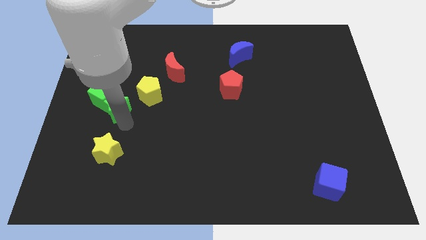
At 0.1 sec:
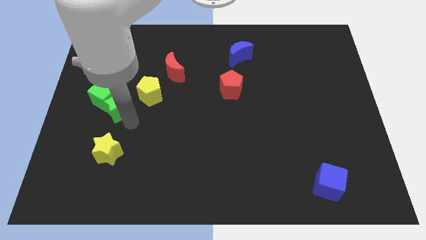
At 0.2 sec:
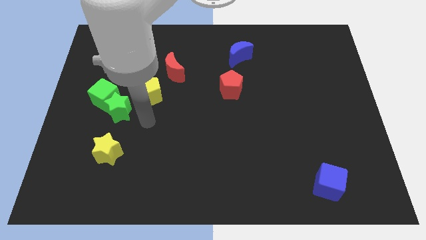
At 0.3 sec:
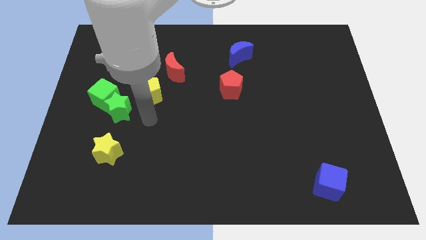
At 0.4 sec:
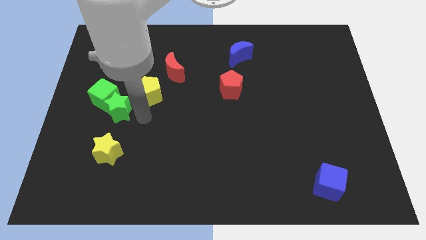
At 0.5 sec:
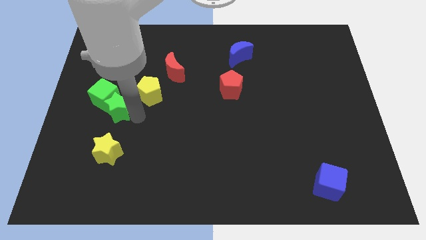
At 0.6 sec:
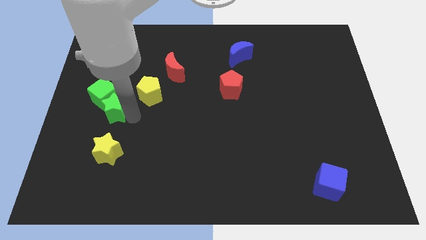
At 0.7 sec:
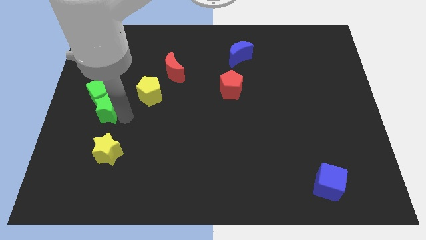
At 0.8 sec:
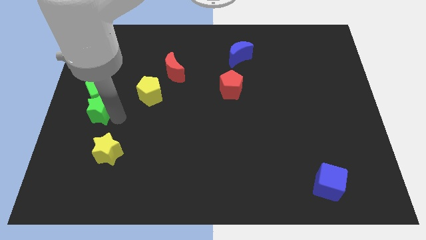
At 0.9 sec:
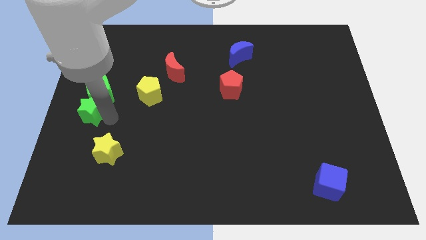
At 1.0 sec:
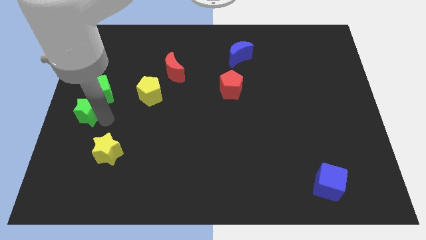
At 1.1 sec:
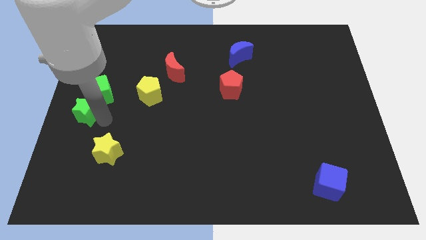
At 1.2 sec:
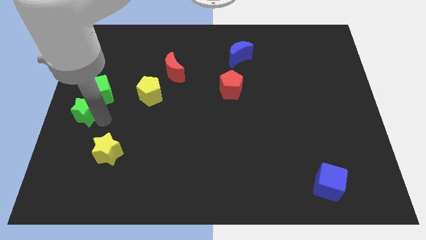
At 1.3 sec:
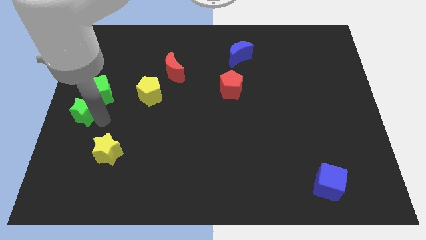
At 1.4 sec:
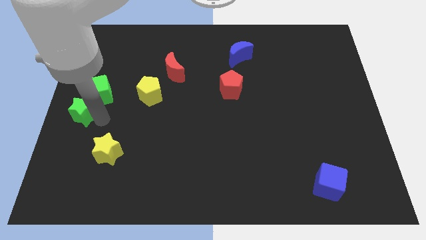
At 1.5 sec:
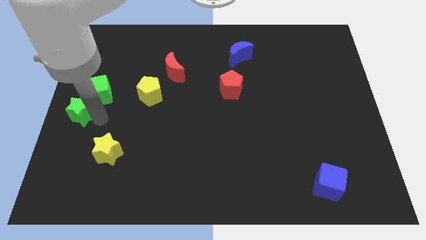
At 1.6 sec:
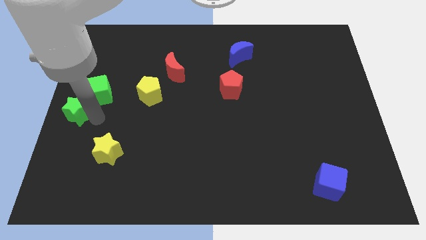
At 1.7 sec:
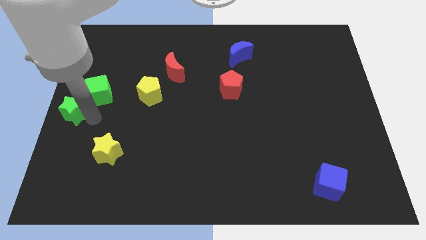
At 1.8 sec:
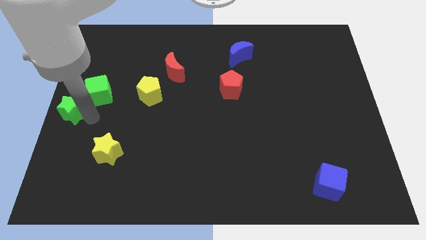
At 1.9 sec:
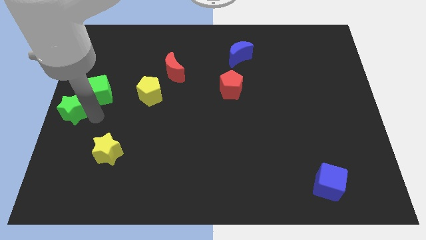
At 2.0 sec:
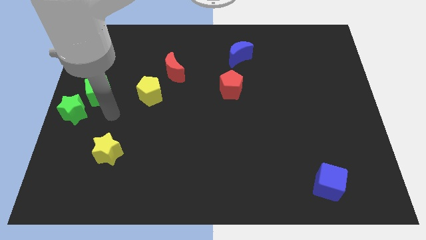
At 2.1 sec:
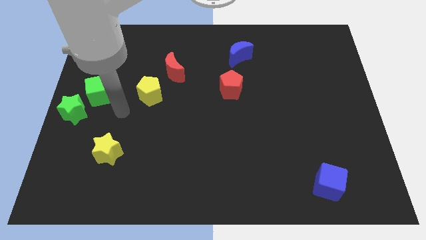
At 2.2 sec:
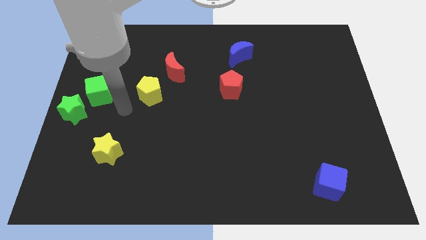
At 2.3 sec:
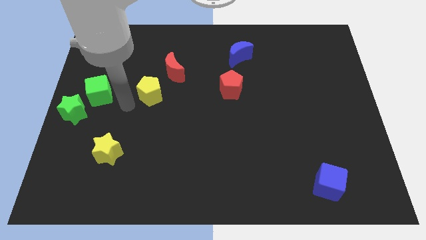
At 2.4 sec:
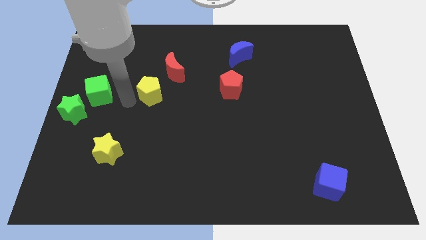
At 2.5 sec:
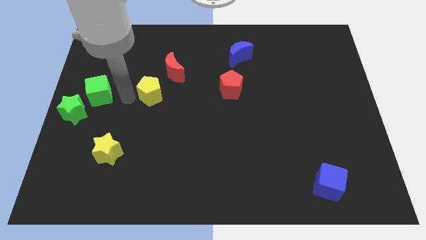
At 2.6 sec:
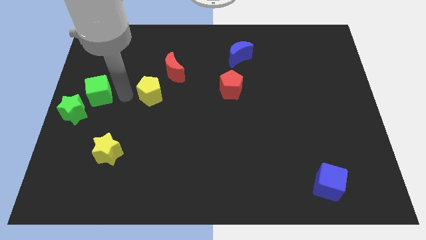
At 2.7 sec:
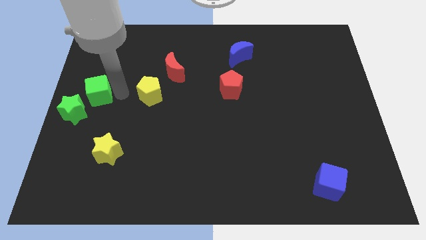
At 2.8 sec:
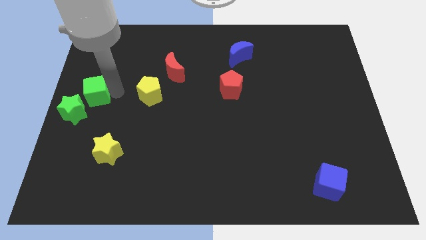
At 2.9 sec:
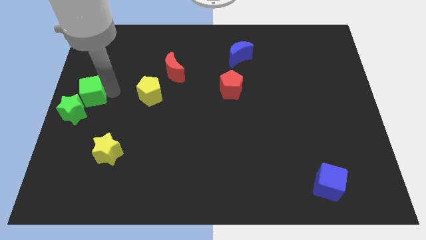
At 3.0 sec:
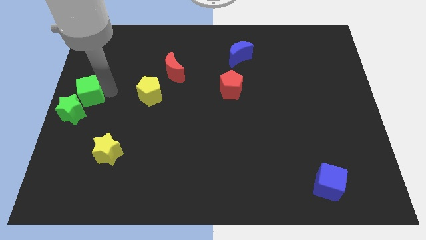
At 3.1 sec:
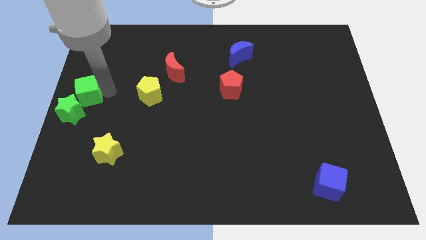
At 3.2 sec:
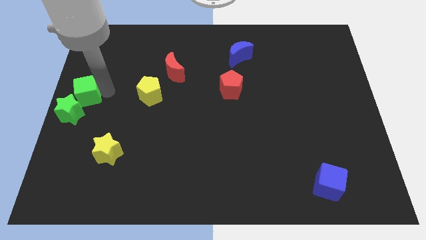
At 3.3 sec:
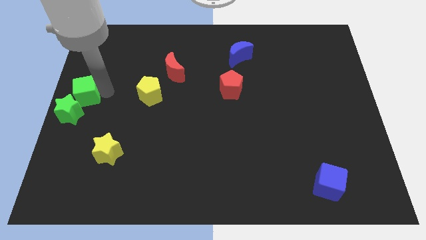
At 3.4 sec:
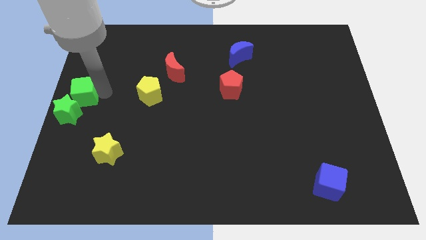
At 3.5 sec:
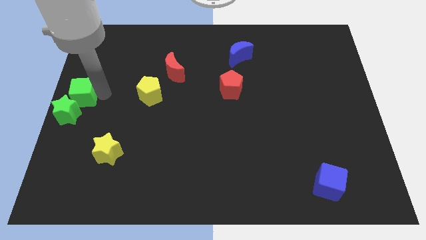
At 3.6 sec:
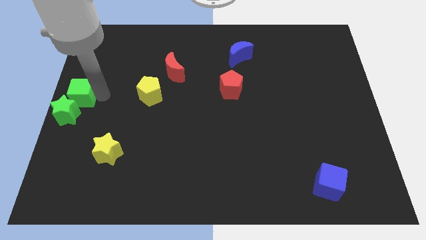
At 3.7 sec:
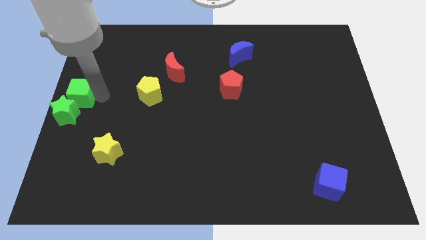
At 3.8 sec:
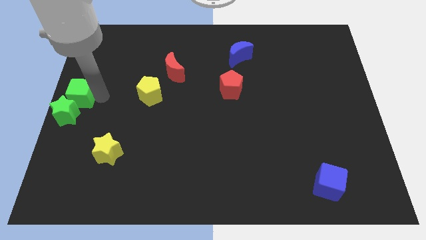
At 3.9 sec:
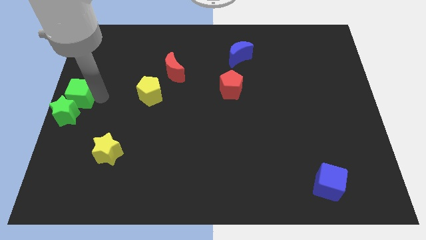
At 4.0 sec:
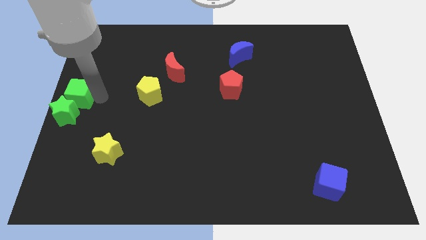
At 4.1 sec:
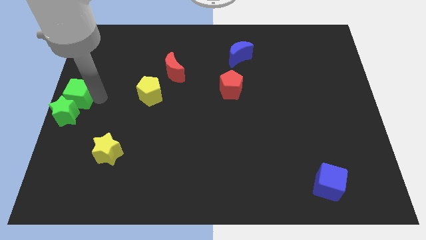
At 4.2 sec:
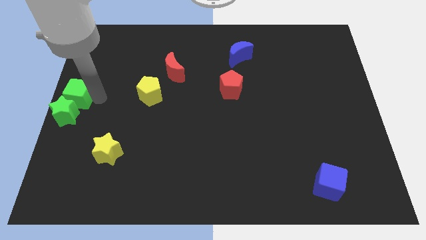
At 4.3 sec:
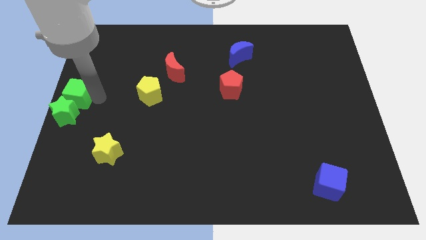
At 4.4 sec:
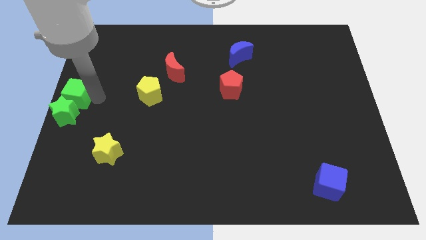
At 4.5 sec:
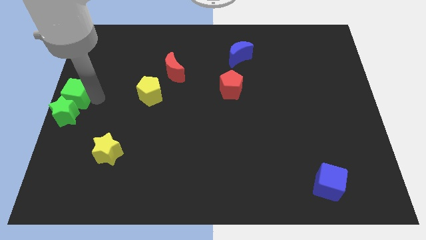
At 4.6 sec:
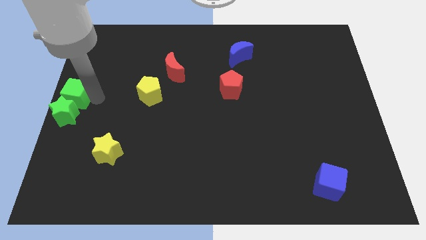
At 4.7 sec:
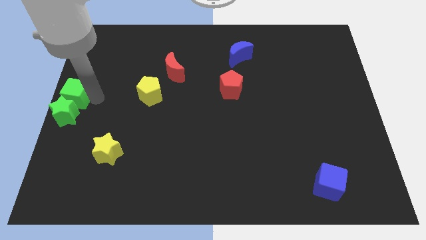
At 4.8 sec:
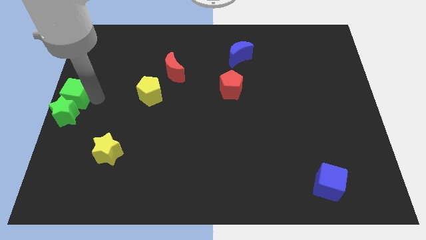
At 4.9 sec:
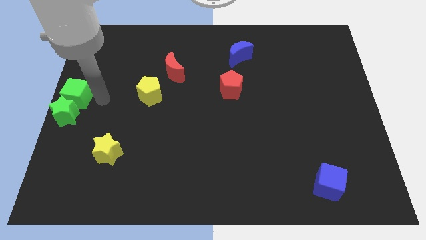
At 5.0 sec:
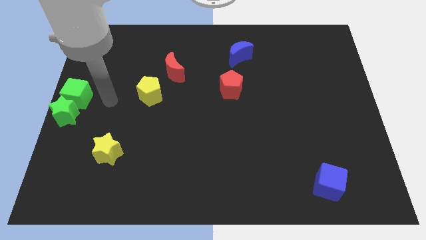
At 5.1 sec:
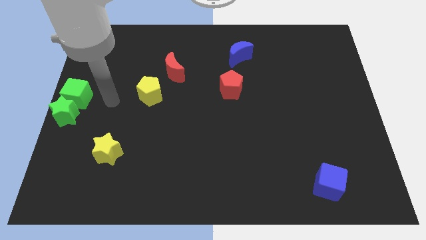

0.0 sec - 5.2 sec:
move the green cube above the green star

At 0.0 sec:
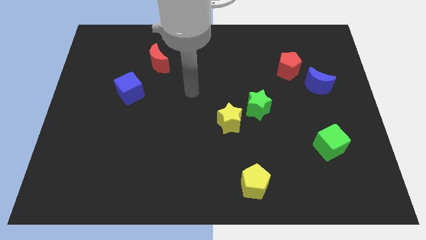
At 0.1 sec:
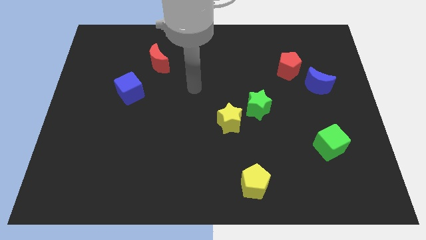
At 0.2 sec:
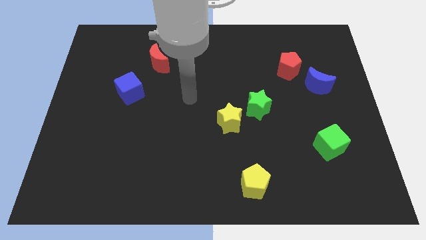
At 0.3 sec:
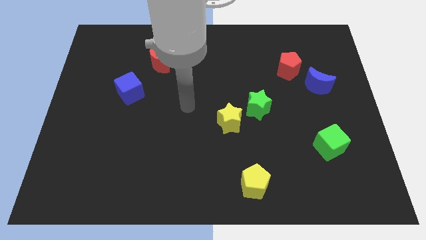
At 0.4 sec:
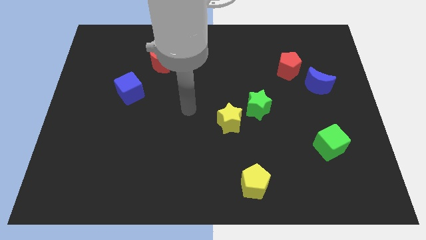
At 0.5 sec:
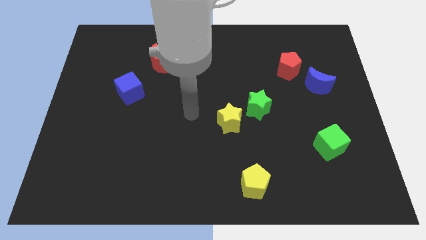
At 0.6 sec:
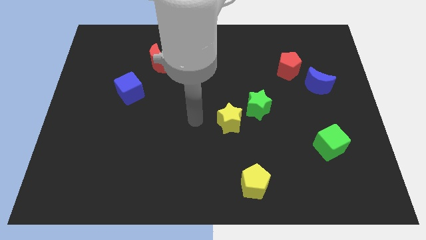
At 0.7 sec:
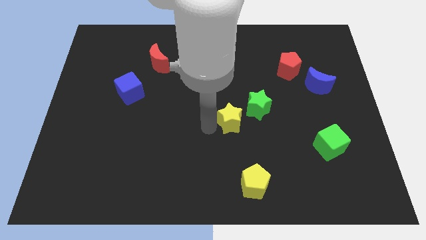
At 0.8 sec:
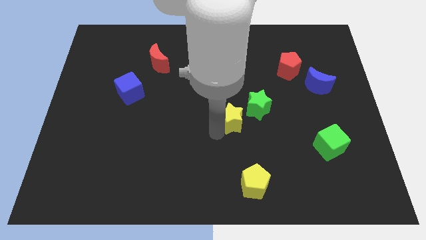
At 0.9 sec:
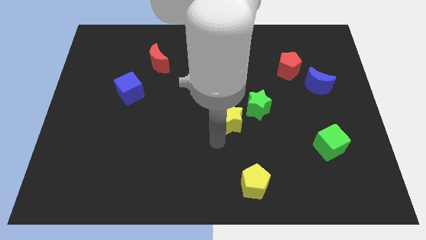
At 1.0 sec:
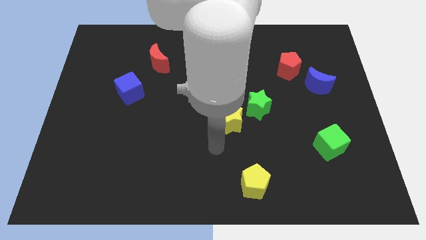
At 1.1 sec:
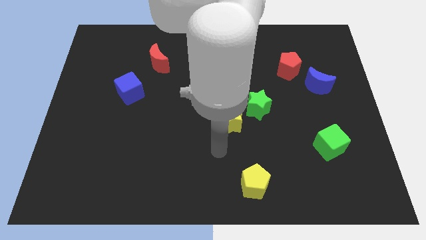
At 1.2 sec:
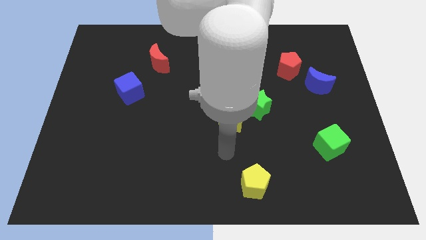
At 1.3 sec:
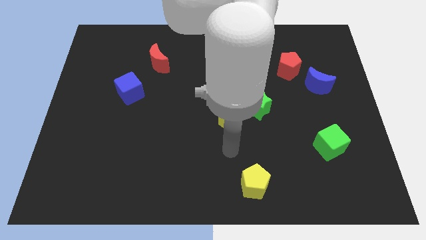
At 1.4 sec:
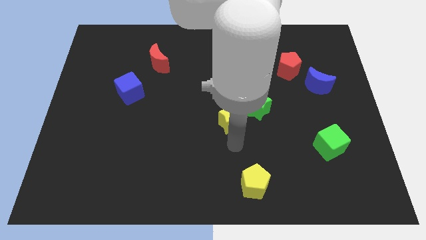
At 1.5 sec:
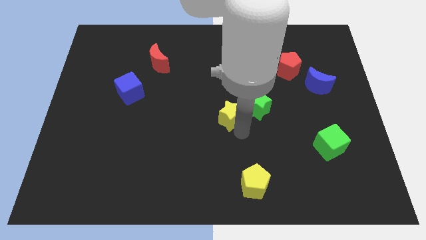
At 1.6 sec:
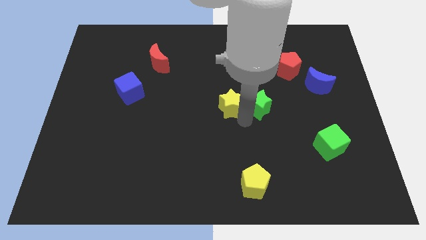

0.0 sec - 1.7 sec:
place the yellow star parallel left to the green star

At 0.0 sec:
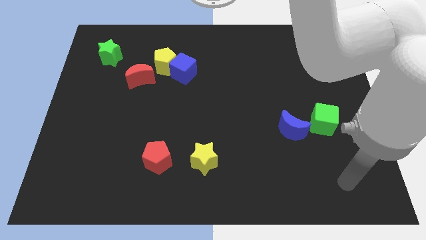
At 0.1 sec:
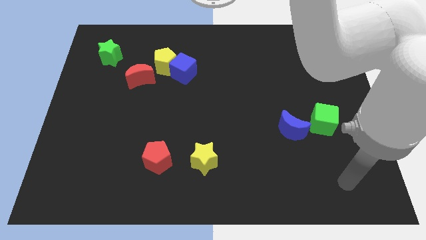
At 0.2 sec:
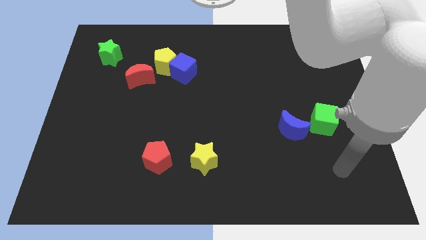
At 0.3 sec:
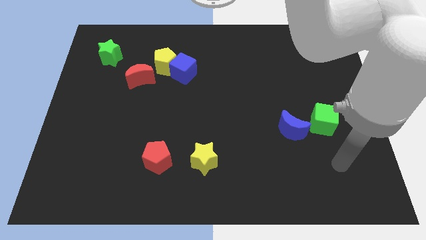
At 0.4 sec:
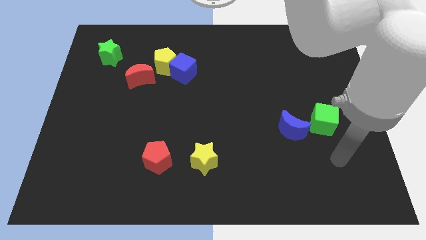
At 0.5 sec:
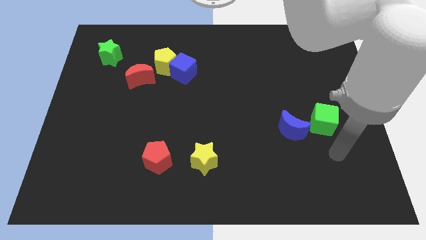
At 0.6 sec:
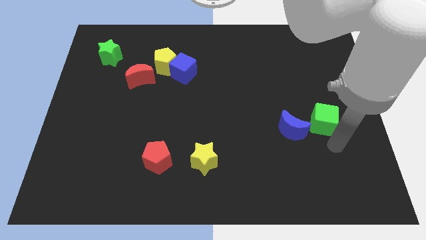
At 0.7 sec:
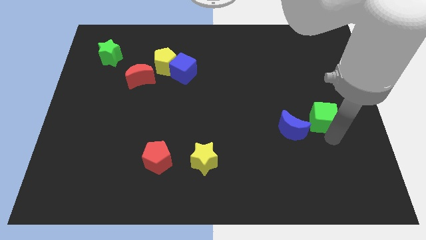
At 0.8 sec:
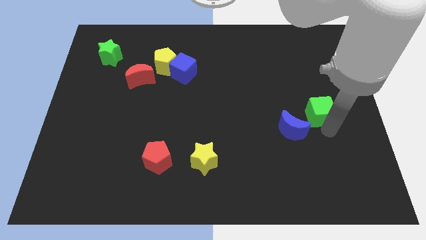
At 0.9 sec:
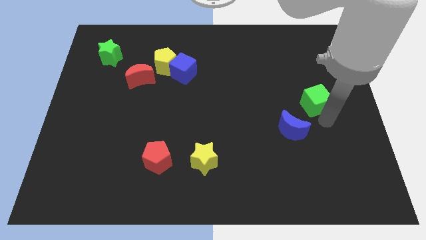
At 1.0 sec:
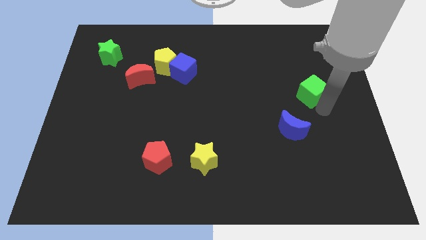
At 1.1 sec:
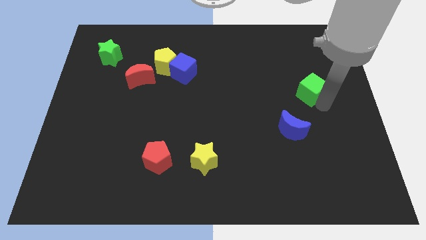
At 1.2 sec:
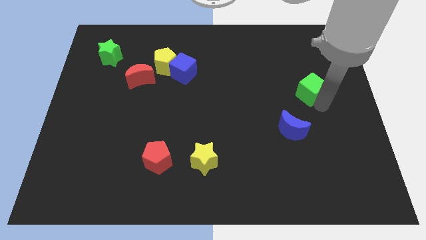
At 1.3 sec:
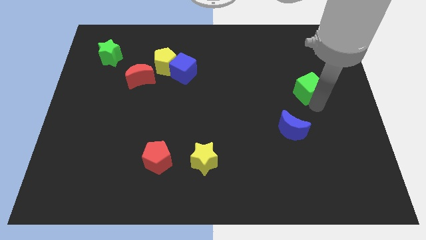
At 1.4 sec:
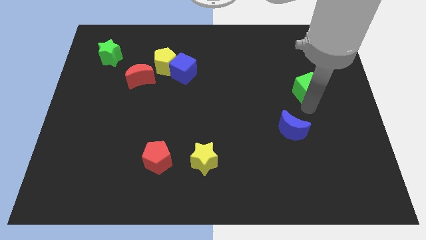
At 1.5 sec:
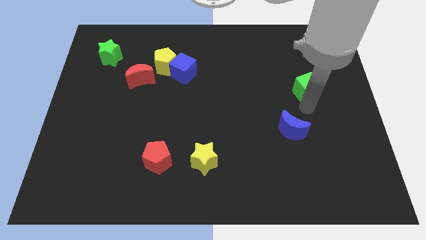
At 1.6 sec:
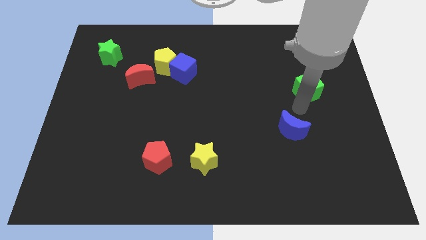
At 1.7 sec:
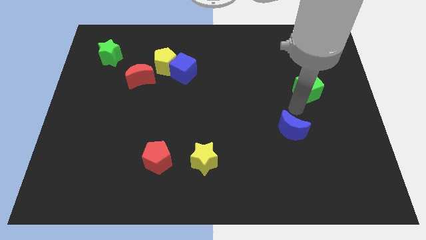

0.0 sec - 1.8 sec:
move the green cube upwards
